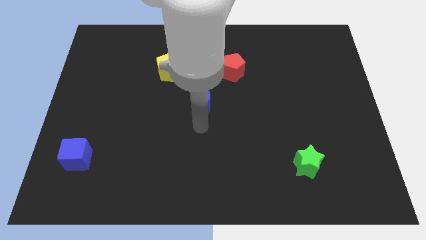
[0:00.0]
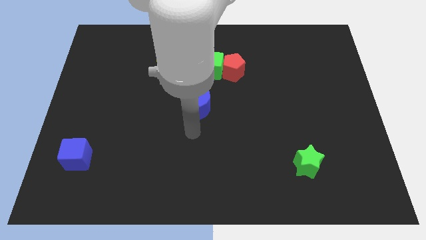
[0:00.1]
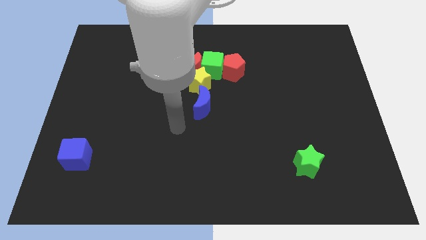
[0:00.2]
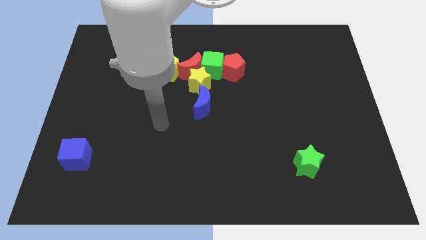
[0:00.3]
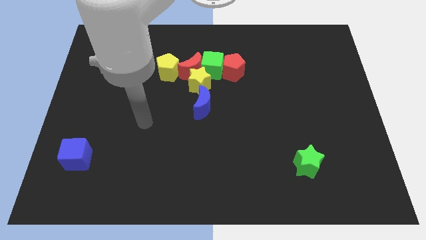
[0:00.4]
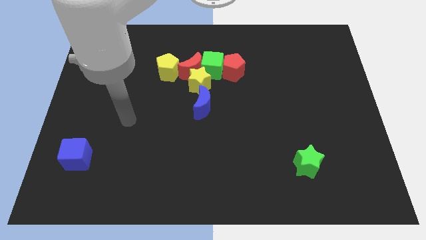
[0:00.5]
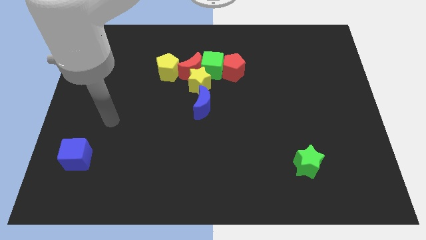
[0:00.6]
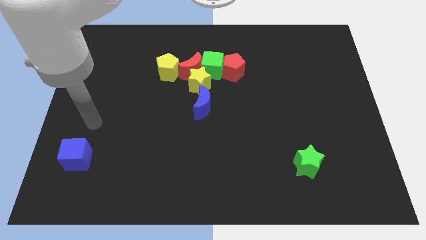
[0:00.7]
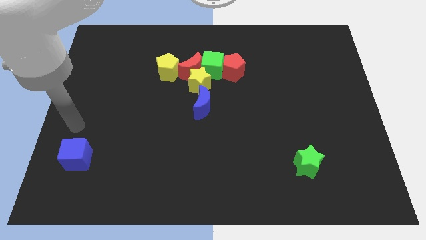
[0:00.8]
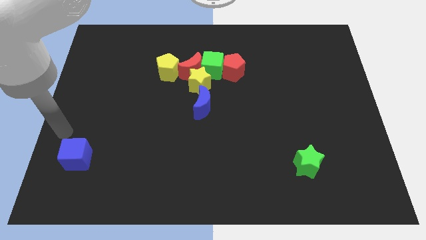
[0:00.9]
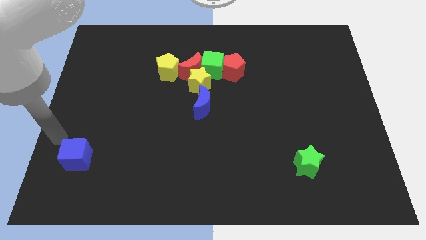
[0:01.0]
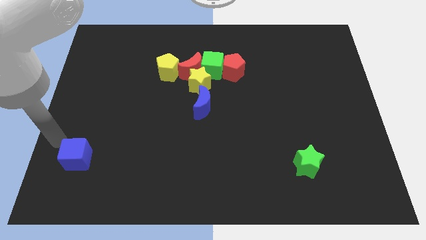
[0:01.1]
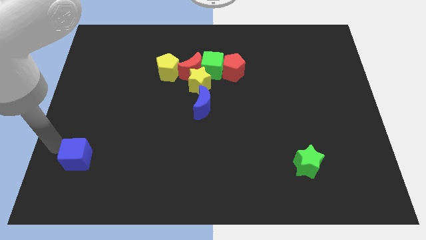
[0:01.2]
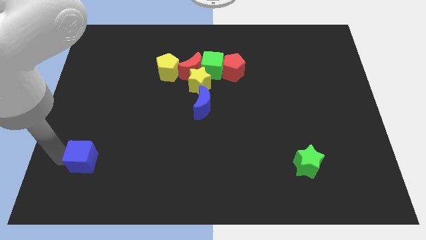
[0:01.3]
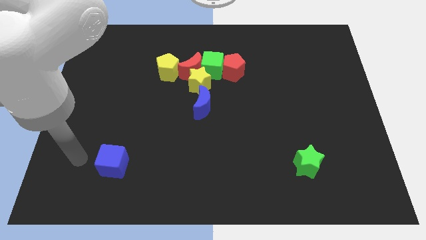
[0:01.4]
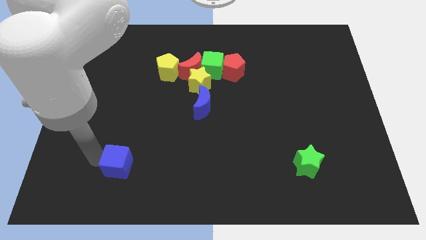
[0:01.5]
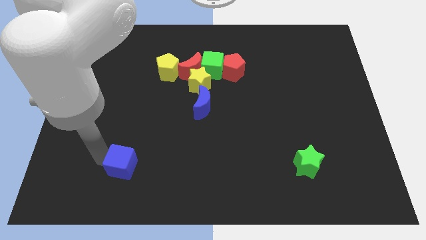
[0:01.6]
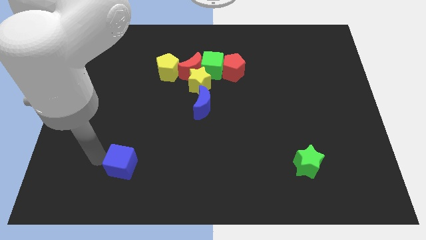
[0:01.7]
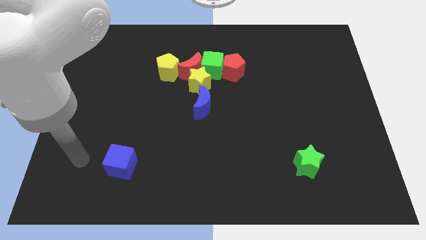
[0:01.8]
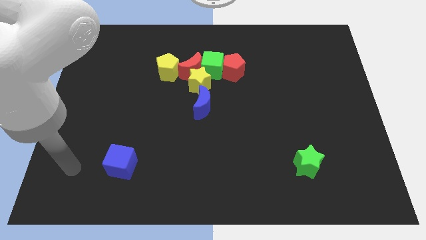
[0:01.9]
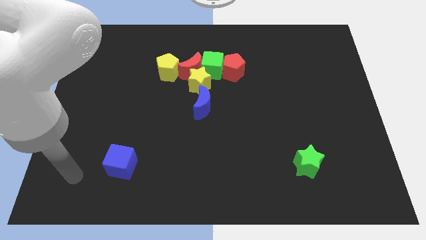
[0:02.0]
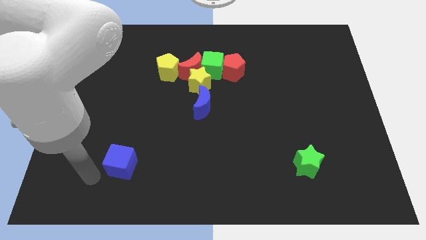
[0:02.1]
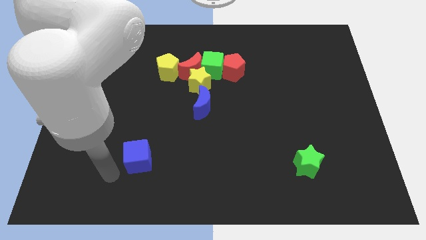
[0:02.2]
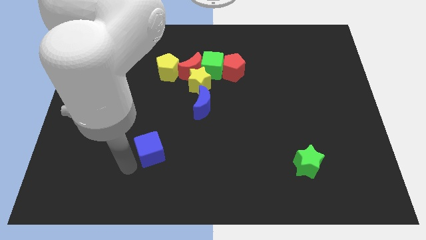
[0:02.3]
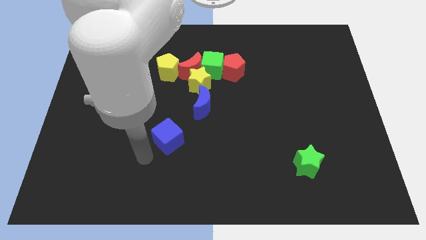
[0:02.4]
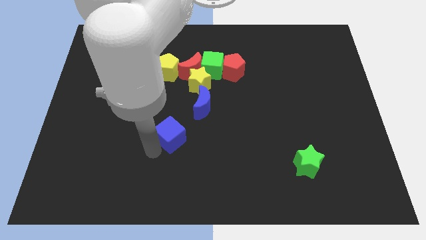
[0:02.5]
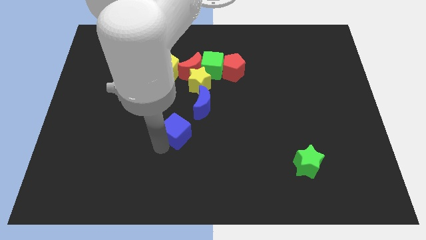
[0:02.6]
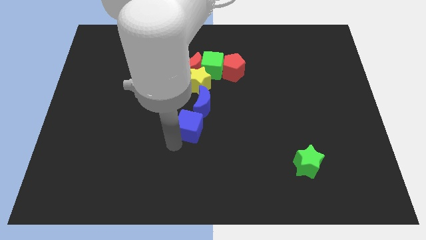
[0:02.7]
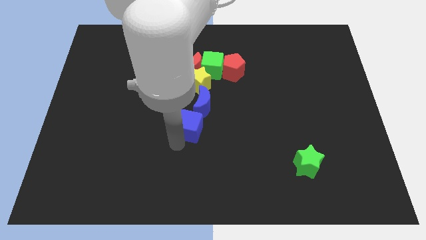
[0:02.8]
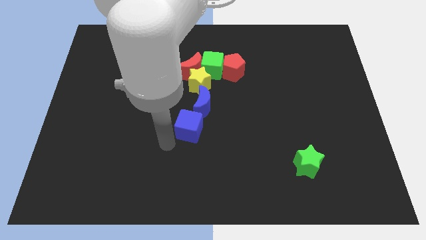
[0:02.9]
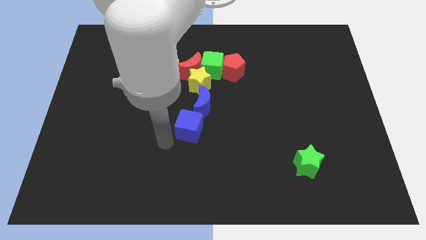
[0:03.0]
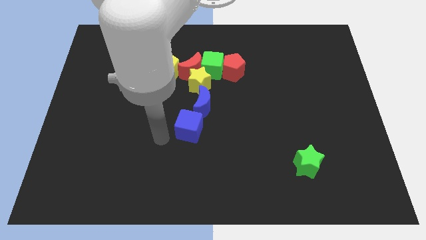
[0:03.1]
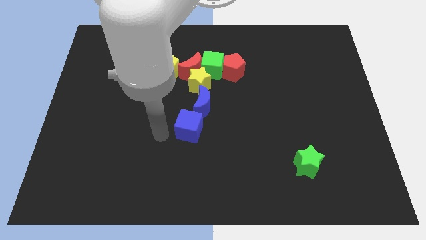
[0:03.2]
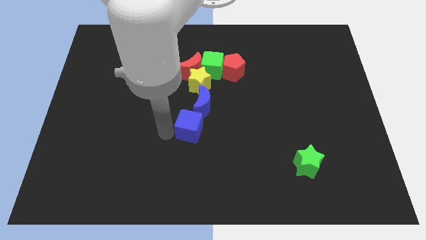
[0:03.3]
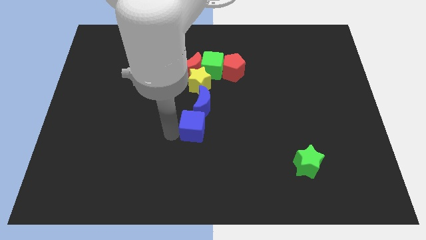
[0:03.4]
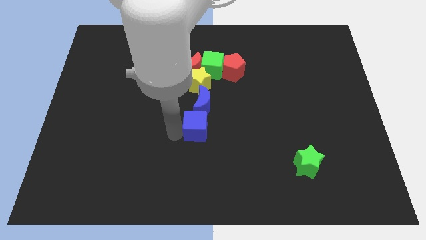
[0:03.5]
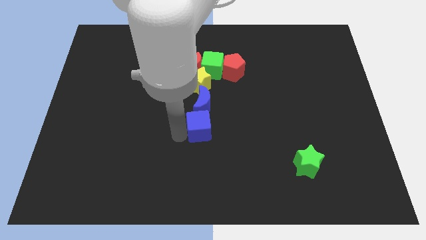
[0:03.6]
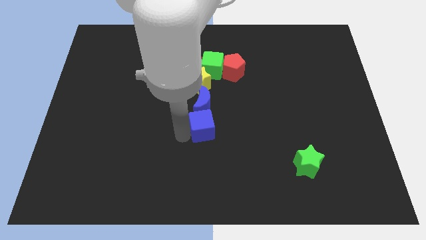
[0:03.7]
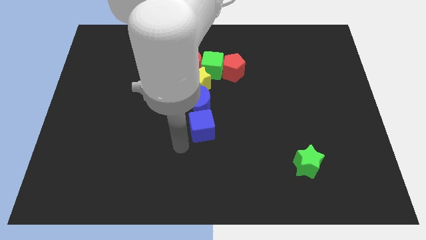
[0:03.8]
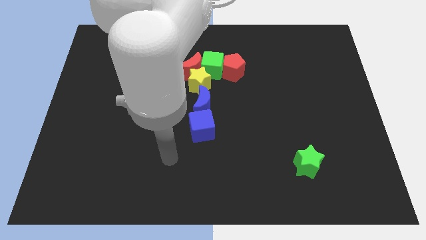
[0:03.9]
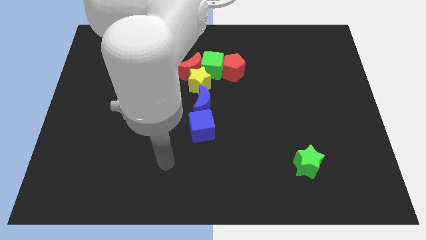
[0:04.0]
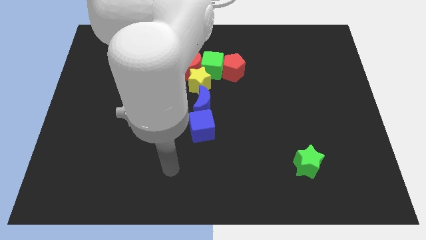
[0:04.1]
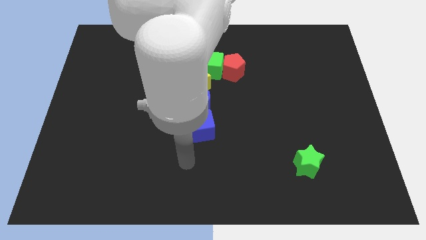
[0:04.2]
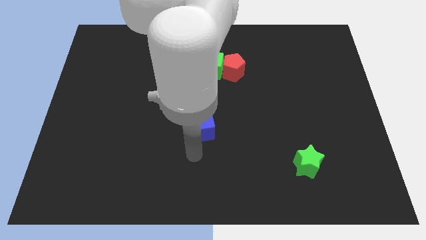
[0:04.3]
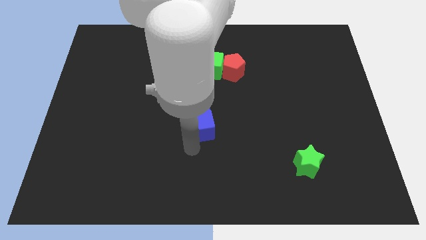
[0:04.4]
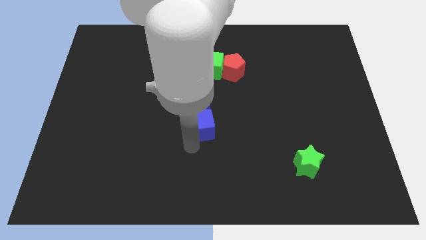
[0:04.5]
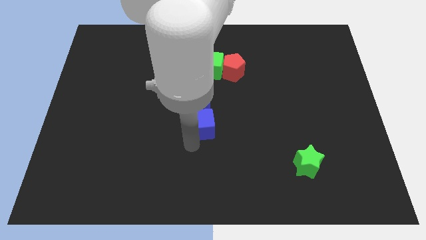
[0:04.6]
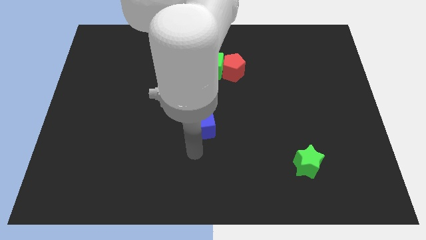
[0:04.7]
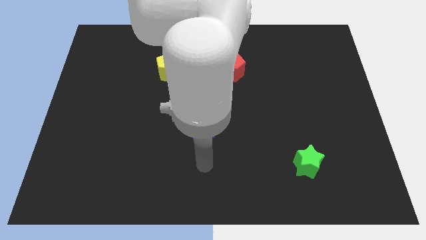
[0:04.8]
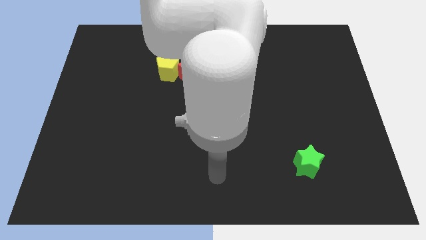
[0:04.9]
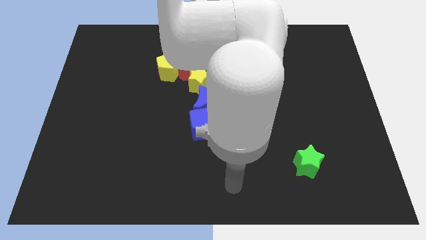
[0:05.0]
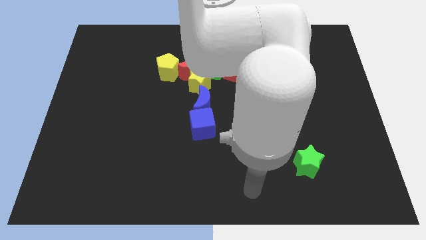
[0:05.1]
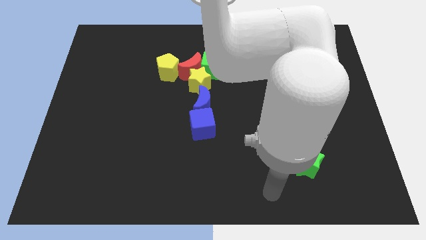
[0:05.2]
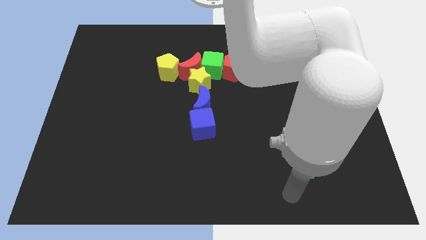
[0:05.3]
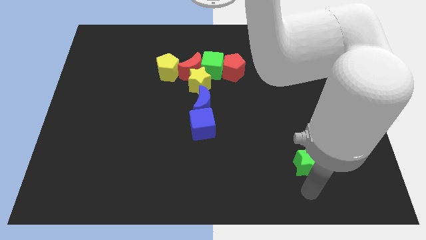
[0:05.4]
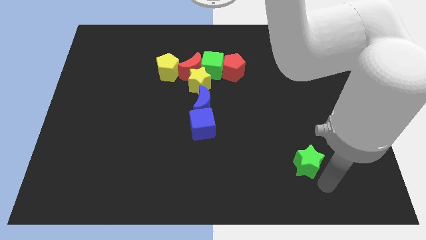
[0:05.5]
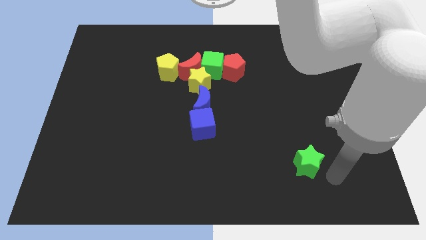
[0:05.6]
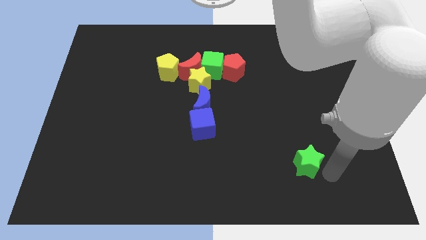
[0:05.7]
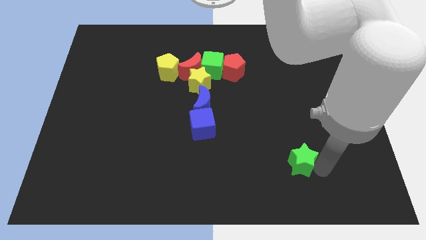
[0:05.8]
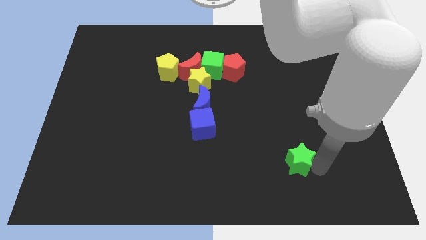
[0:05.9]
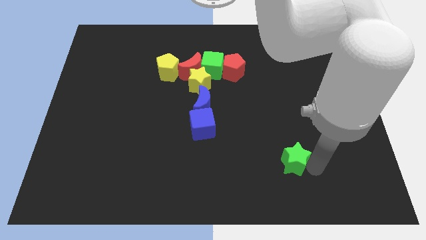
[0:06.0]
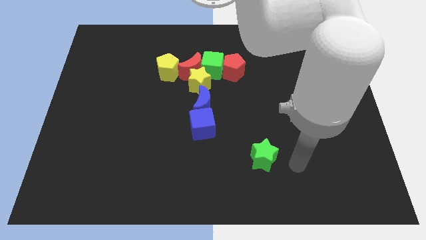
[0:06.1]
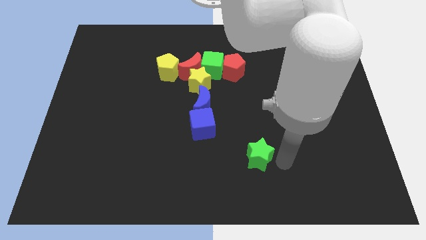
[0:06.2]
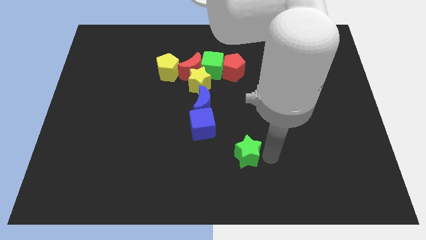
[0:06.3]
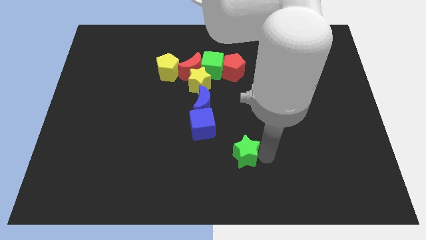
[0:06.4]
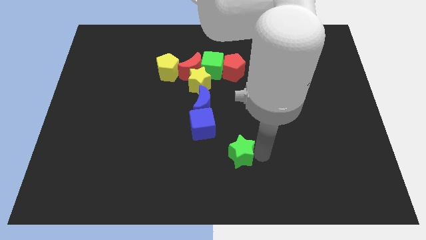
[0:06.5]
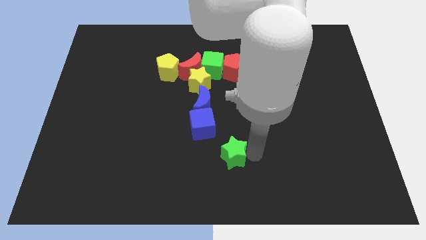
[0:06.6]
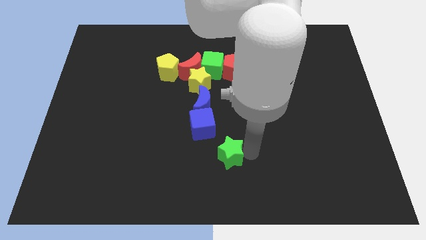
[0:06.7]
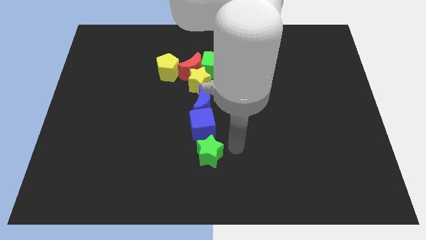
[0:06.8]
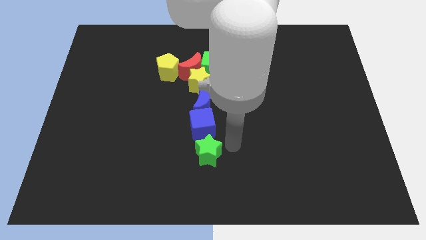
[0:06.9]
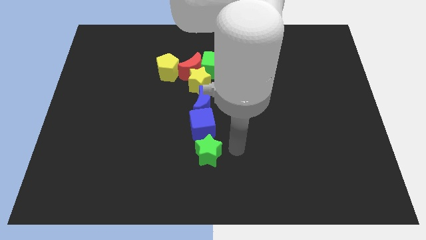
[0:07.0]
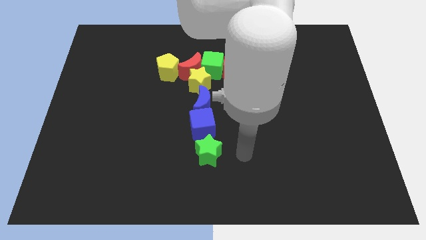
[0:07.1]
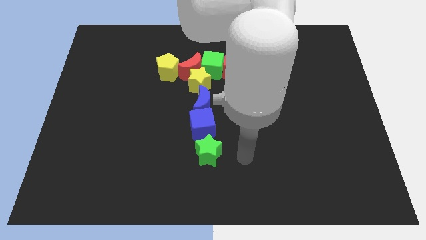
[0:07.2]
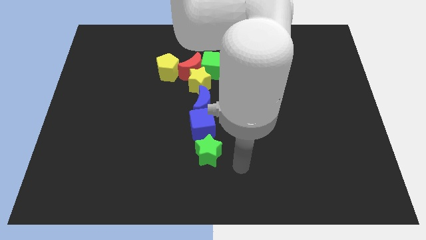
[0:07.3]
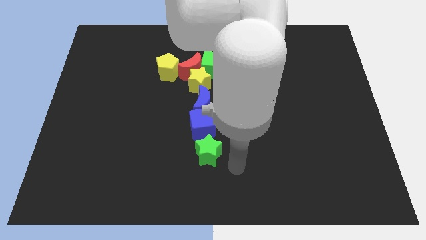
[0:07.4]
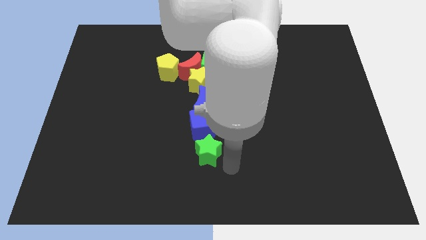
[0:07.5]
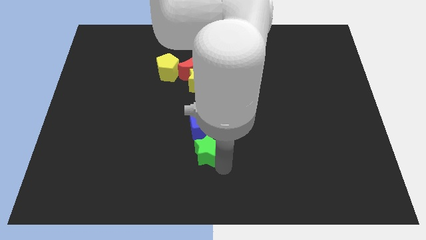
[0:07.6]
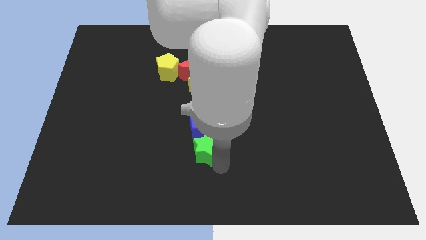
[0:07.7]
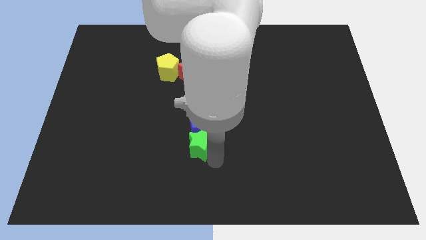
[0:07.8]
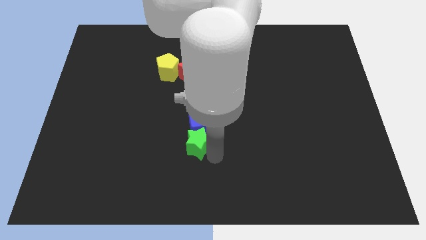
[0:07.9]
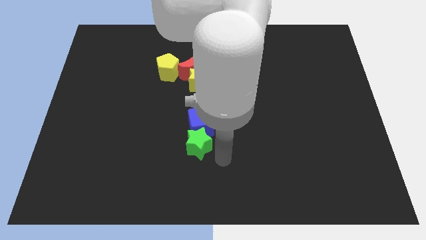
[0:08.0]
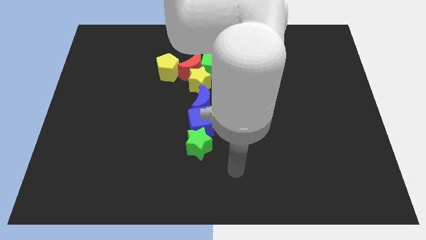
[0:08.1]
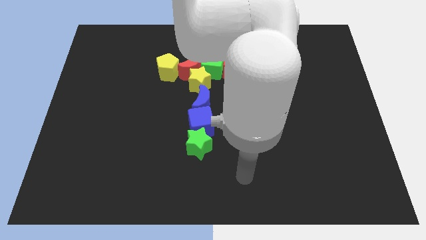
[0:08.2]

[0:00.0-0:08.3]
make a vertical line with the blue blocks and other two stars

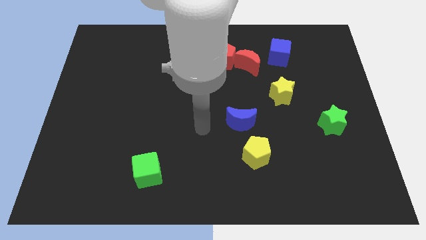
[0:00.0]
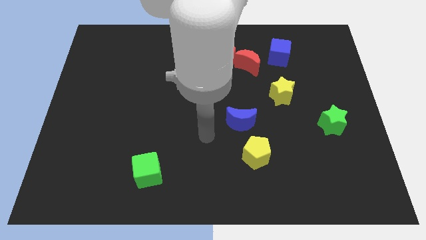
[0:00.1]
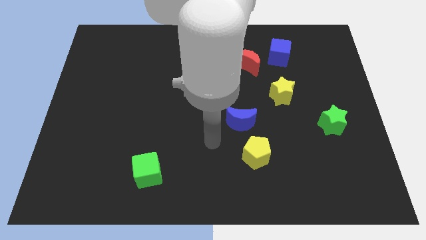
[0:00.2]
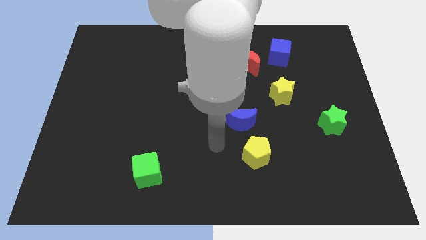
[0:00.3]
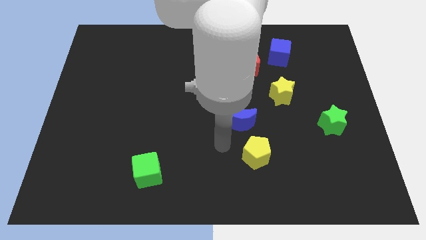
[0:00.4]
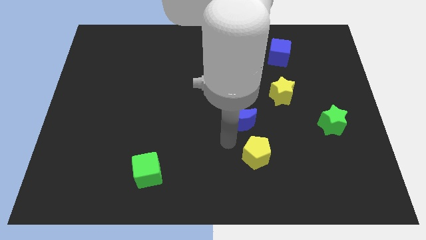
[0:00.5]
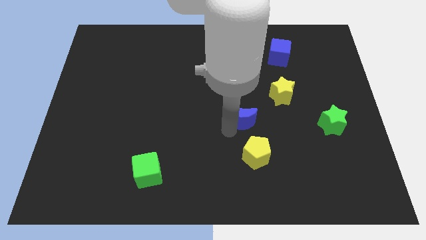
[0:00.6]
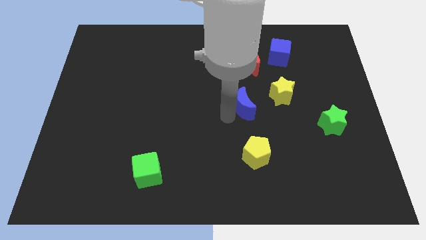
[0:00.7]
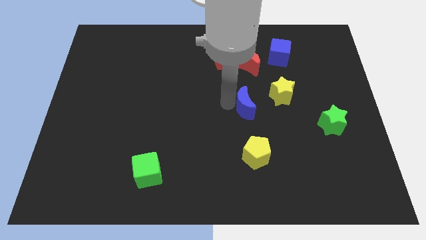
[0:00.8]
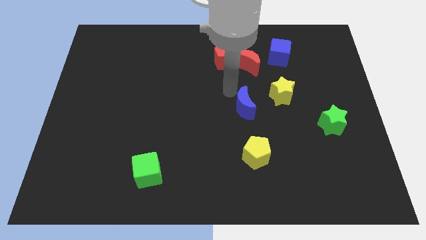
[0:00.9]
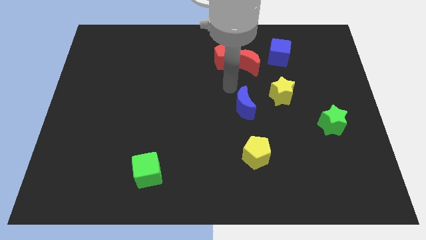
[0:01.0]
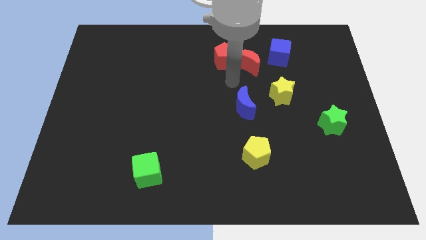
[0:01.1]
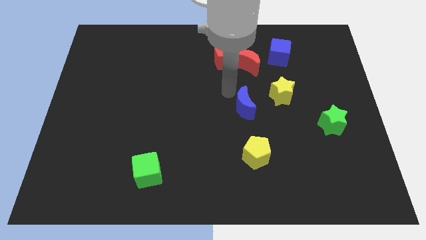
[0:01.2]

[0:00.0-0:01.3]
push the blue crescent to the bottom left to the yellow star
